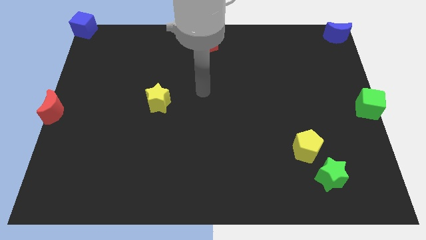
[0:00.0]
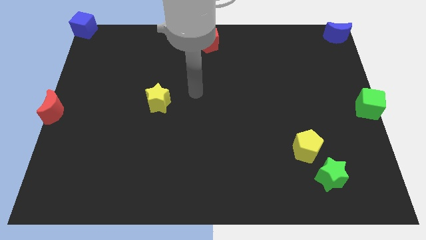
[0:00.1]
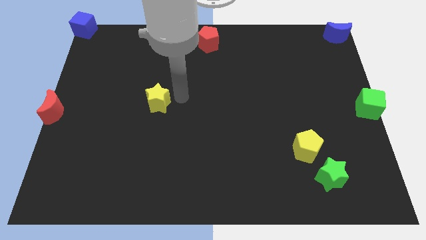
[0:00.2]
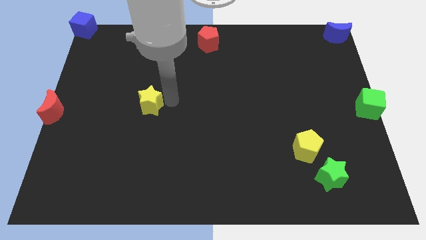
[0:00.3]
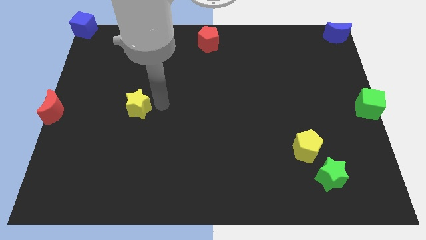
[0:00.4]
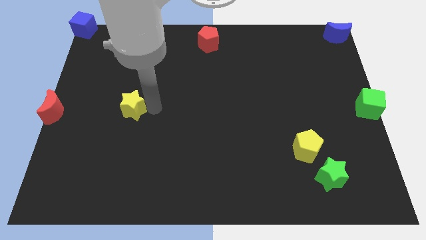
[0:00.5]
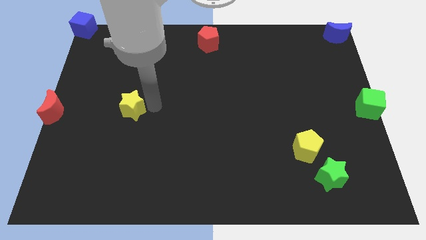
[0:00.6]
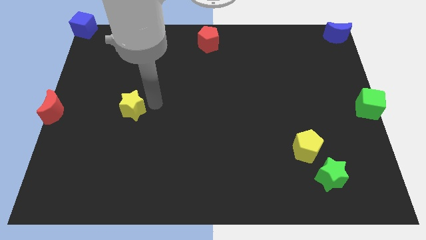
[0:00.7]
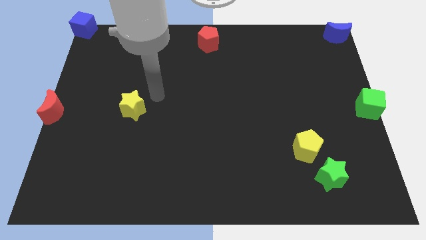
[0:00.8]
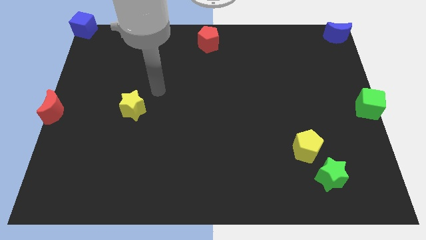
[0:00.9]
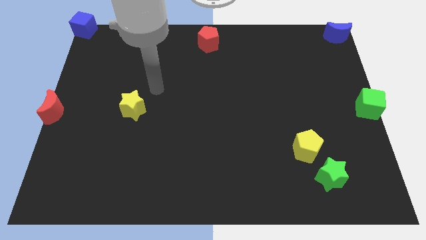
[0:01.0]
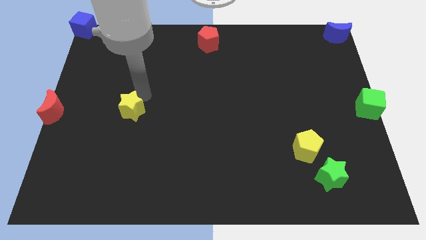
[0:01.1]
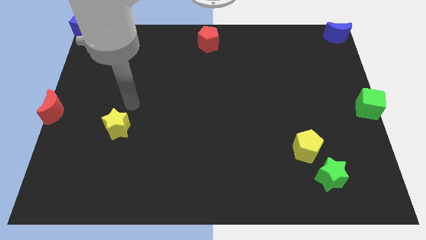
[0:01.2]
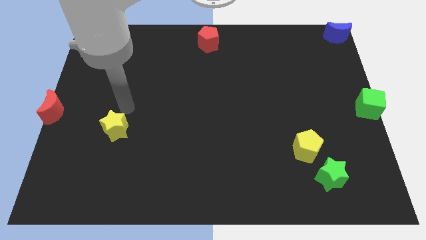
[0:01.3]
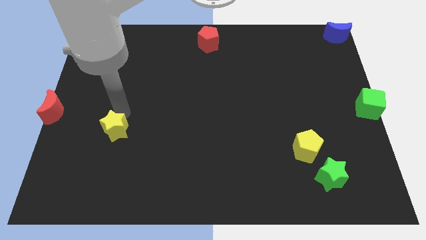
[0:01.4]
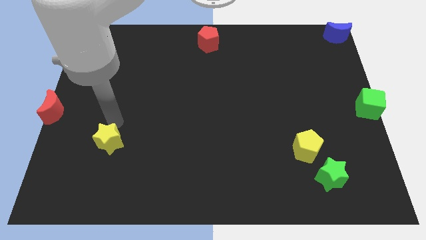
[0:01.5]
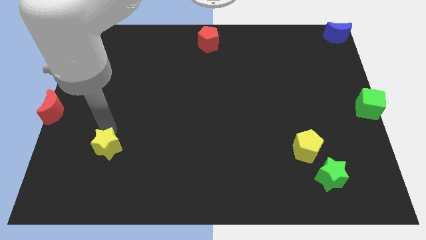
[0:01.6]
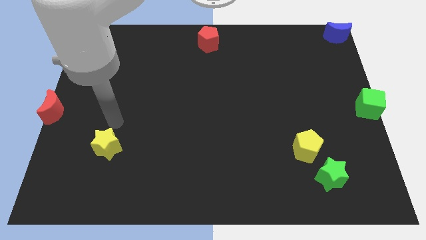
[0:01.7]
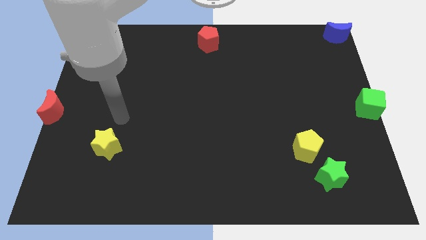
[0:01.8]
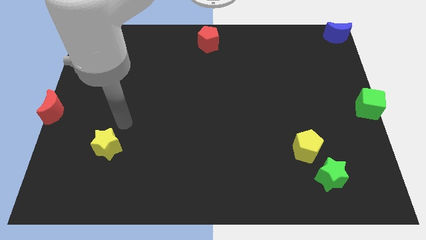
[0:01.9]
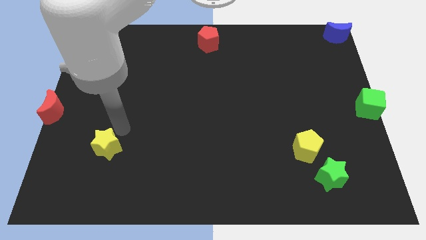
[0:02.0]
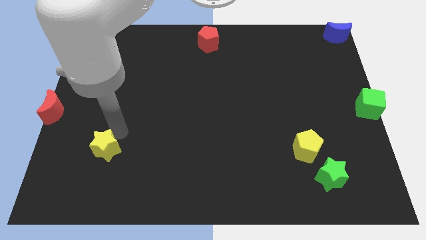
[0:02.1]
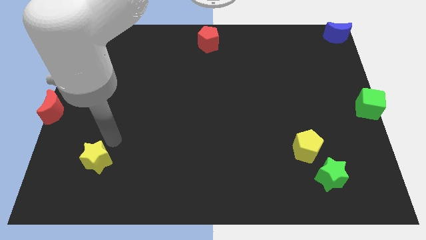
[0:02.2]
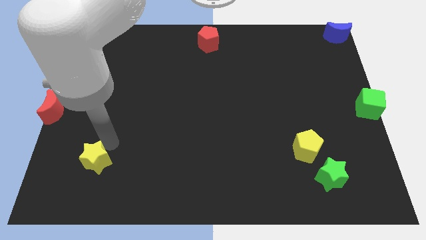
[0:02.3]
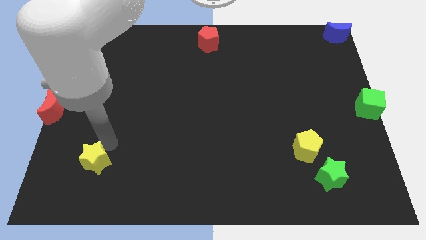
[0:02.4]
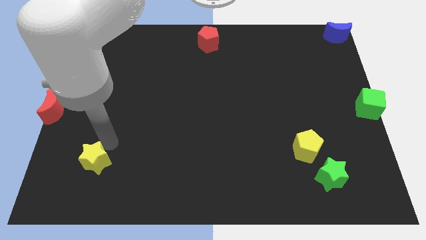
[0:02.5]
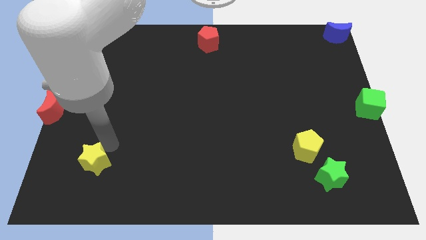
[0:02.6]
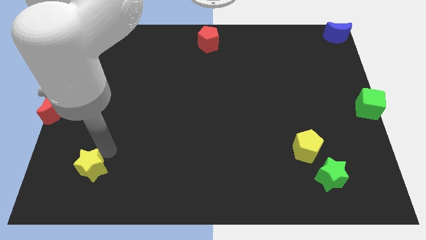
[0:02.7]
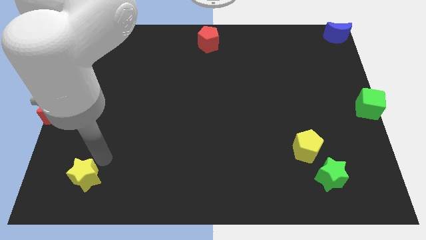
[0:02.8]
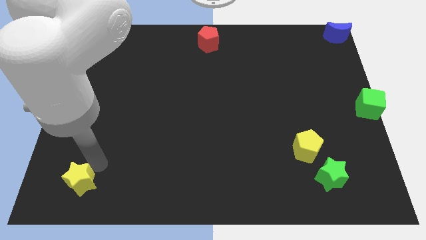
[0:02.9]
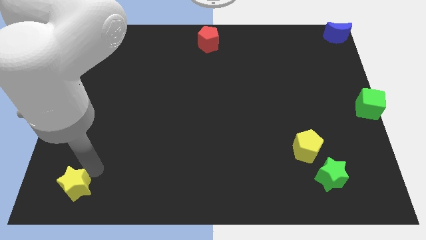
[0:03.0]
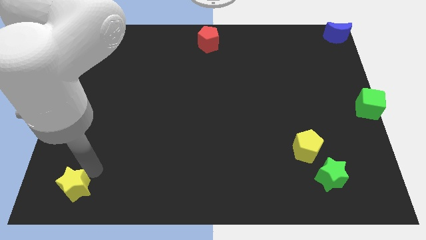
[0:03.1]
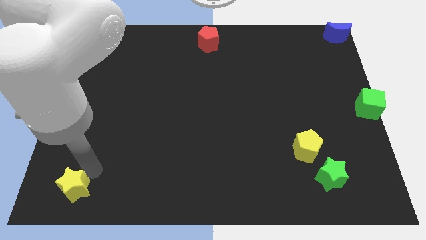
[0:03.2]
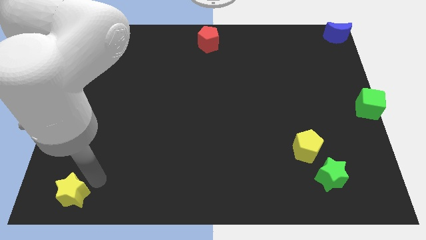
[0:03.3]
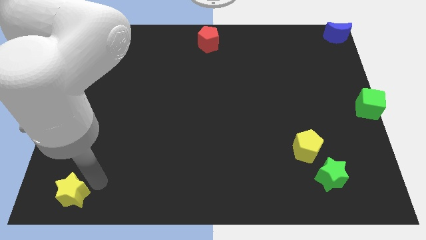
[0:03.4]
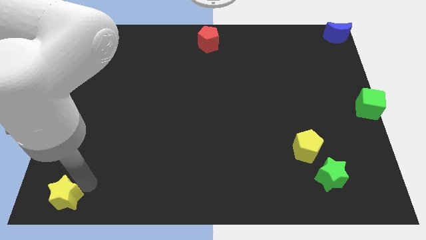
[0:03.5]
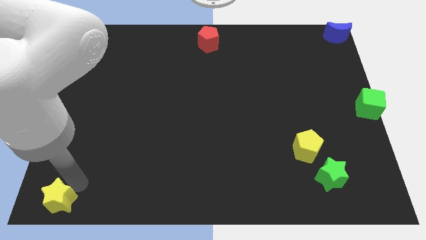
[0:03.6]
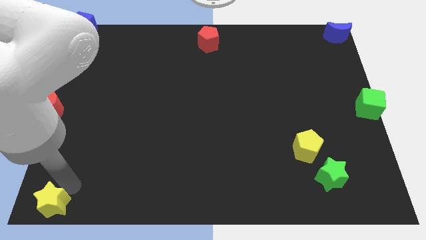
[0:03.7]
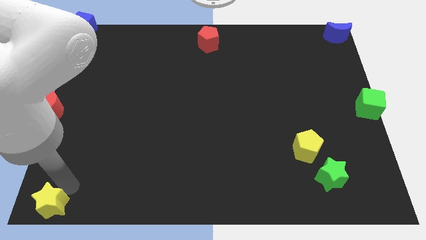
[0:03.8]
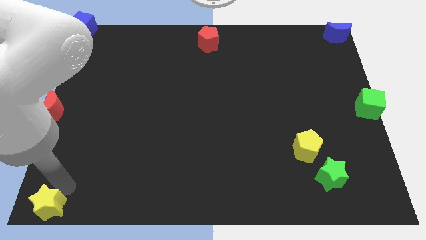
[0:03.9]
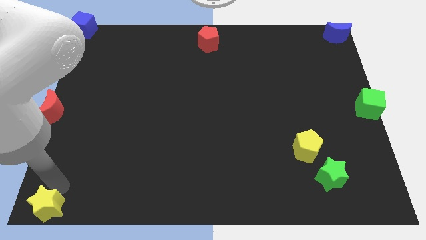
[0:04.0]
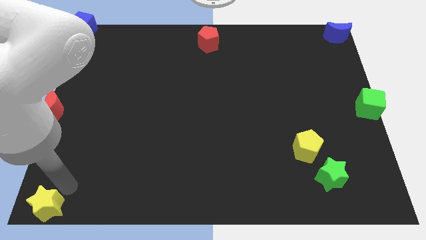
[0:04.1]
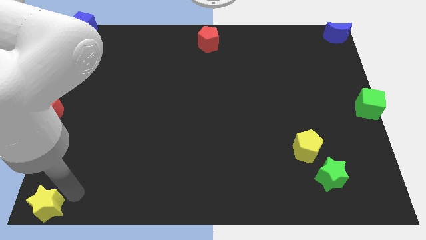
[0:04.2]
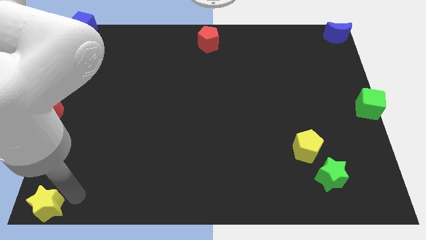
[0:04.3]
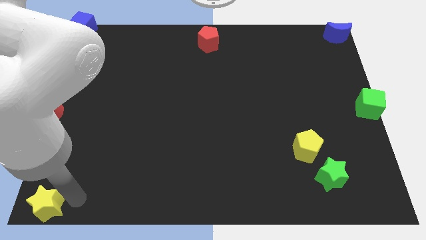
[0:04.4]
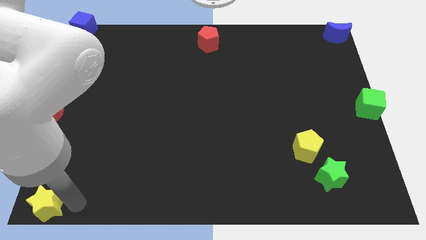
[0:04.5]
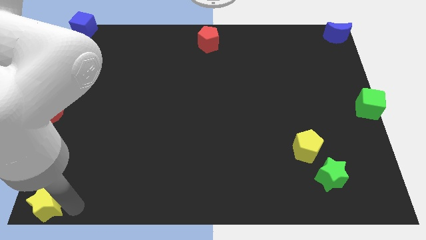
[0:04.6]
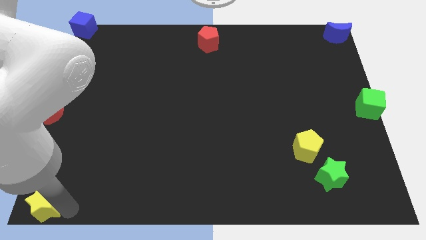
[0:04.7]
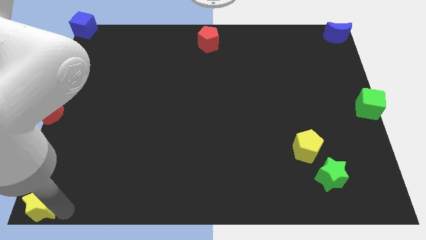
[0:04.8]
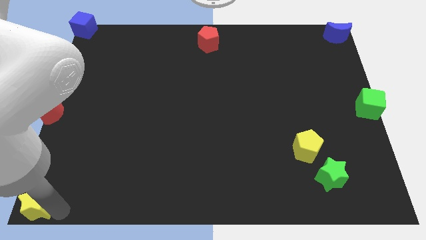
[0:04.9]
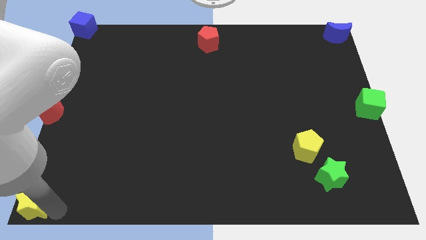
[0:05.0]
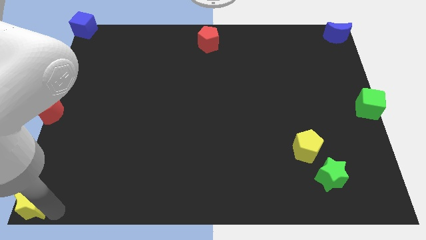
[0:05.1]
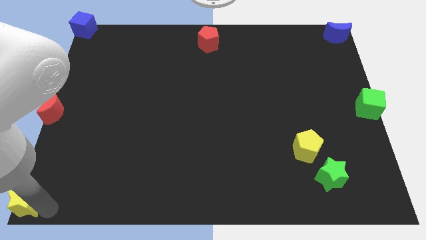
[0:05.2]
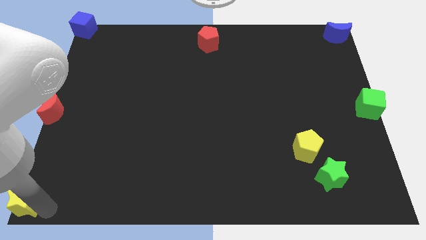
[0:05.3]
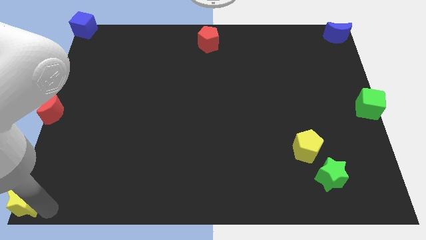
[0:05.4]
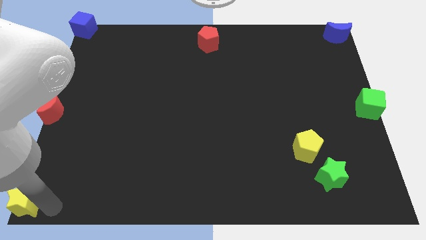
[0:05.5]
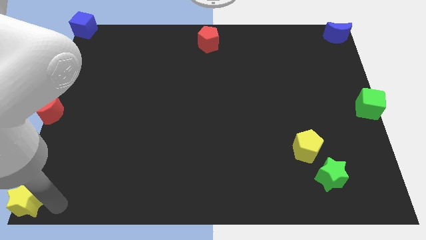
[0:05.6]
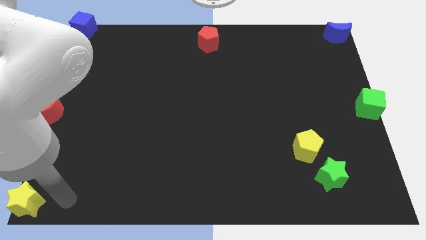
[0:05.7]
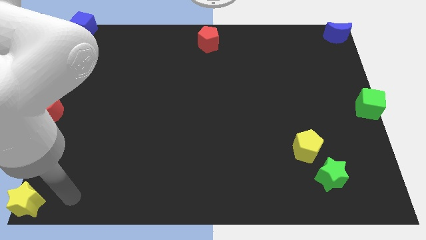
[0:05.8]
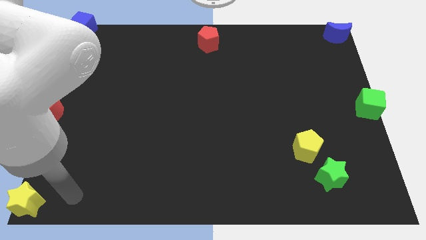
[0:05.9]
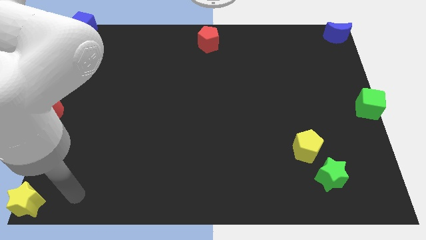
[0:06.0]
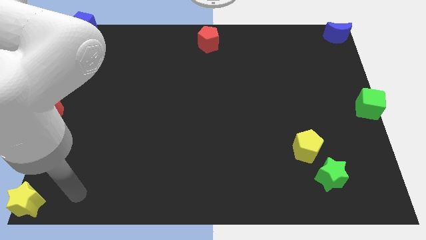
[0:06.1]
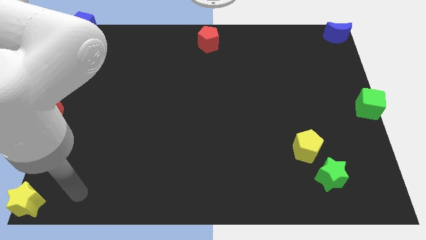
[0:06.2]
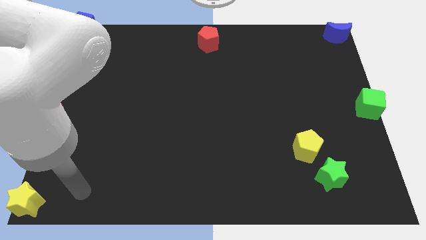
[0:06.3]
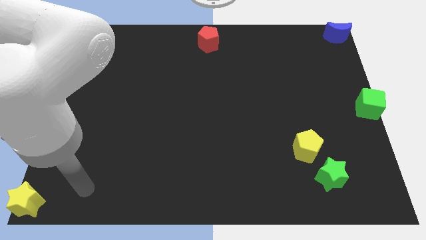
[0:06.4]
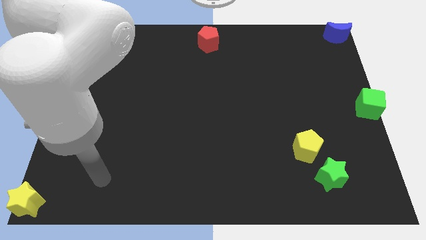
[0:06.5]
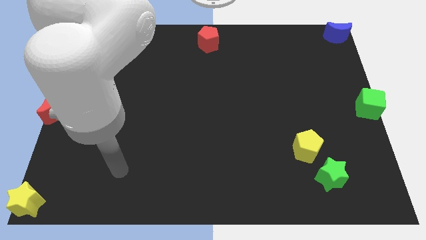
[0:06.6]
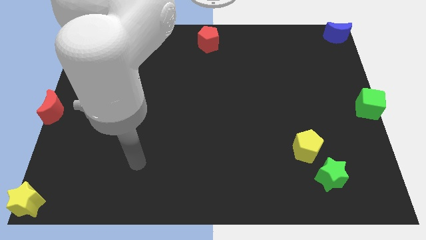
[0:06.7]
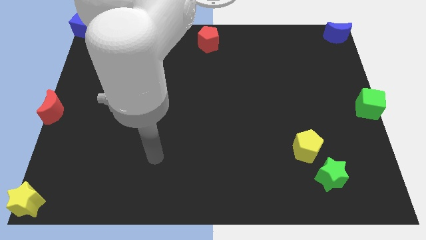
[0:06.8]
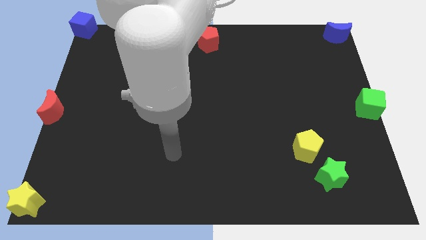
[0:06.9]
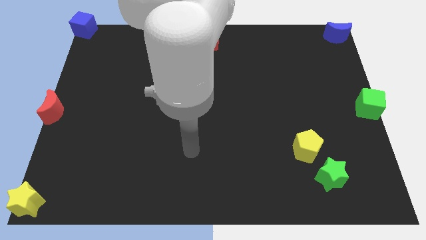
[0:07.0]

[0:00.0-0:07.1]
move yellow star bottom left of the board

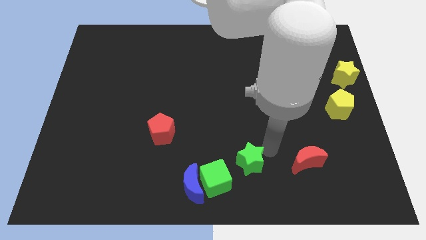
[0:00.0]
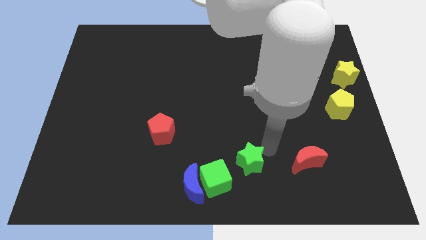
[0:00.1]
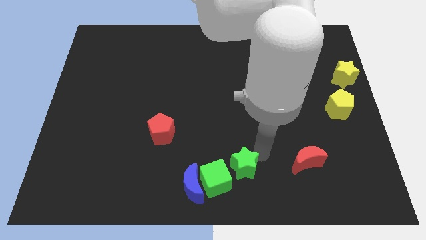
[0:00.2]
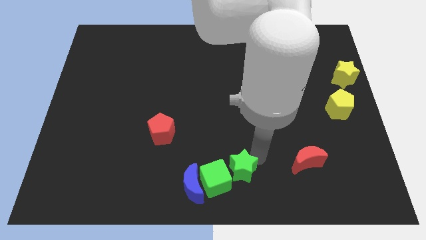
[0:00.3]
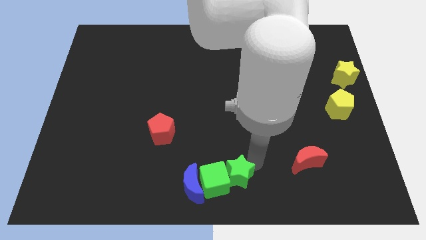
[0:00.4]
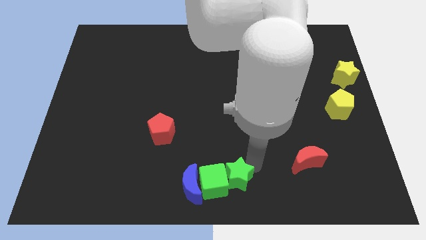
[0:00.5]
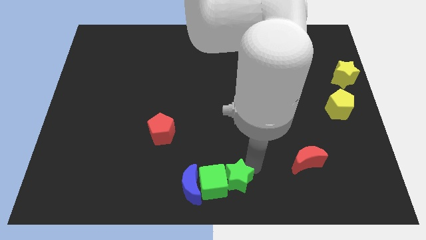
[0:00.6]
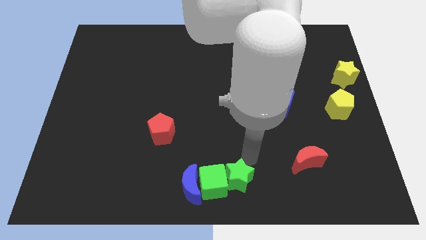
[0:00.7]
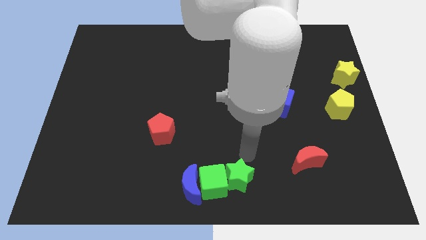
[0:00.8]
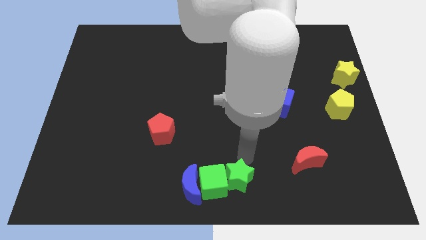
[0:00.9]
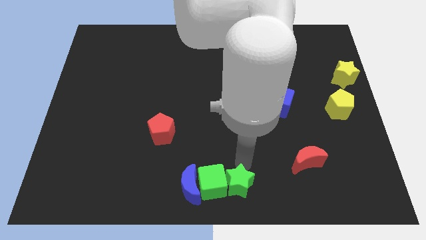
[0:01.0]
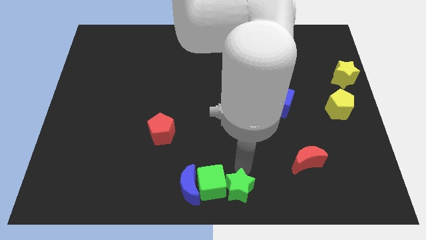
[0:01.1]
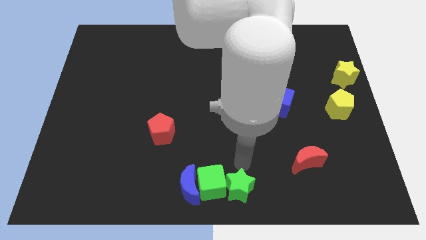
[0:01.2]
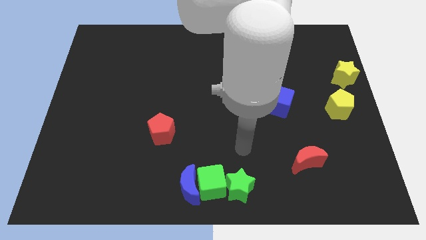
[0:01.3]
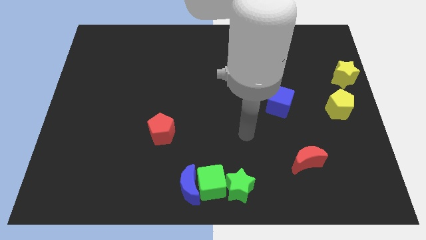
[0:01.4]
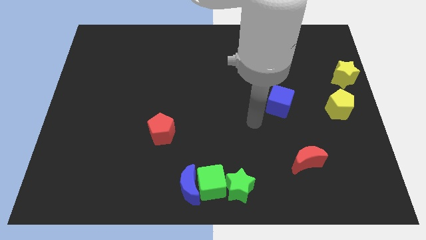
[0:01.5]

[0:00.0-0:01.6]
drag the green star close to the green cube

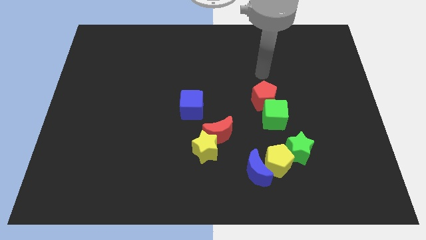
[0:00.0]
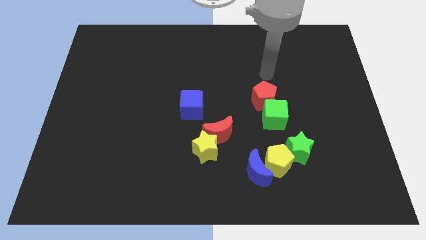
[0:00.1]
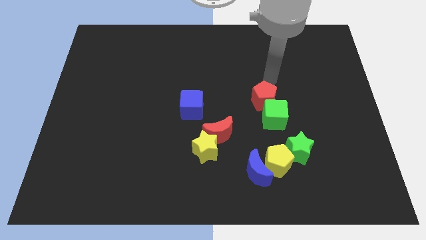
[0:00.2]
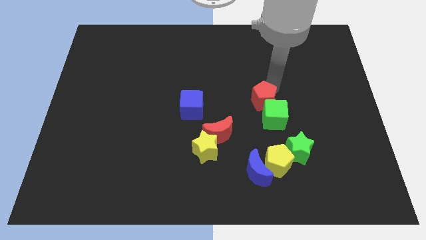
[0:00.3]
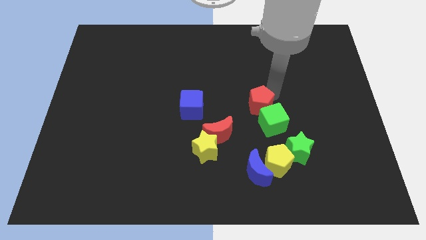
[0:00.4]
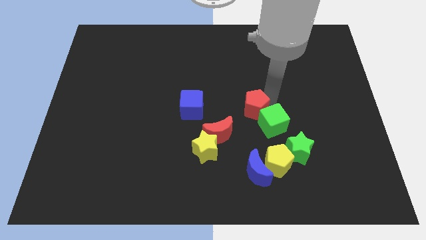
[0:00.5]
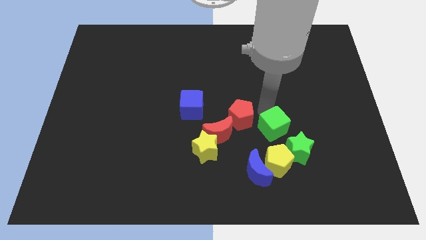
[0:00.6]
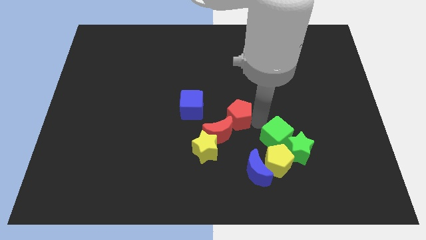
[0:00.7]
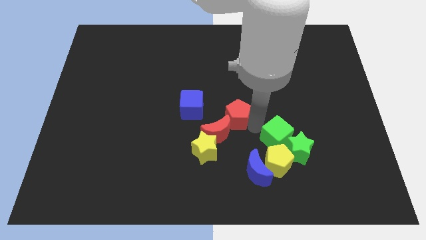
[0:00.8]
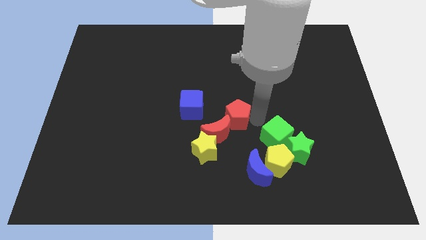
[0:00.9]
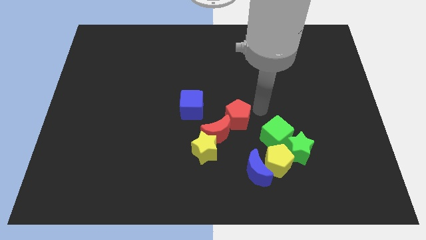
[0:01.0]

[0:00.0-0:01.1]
push the red pentagon towards the top right side of the red crescent to form a diagnoal line
